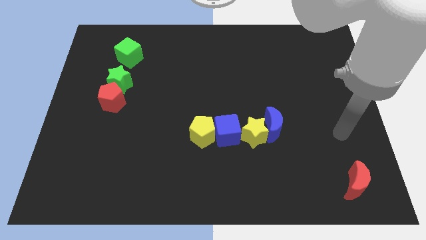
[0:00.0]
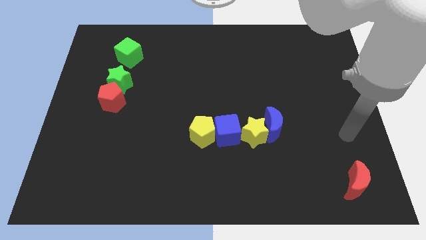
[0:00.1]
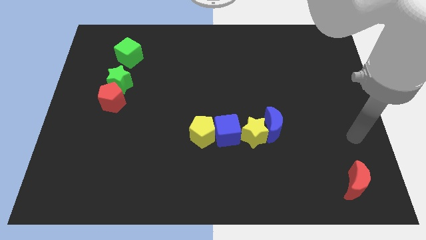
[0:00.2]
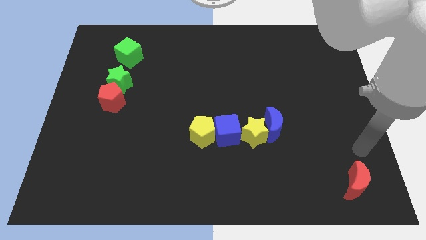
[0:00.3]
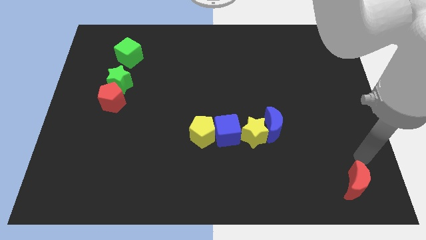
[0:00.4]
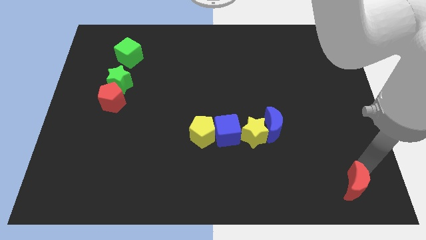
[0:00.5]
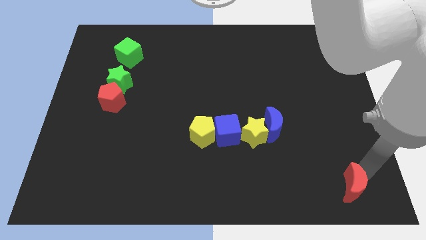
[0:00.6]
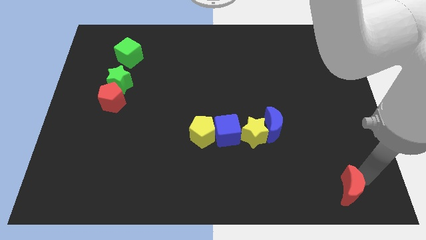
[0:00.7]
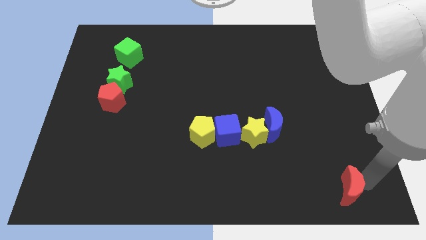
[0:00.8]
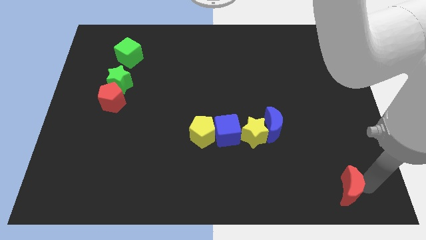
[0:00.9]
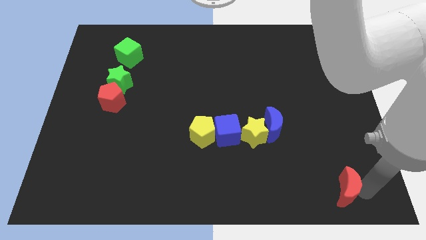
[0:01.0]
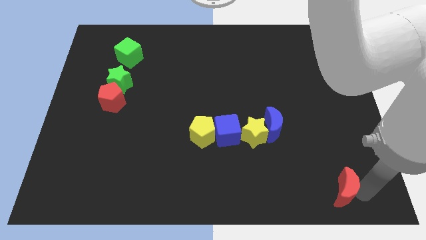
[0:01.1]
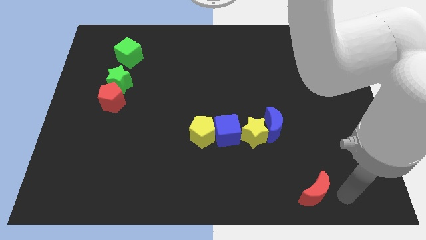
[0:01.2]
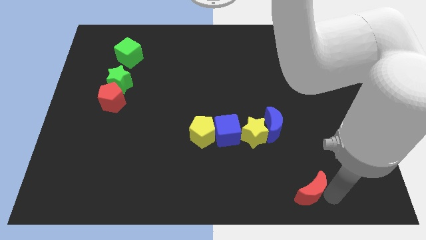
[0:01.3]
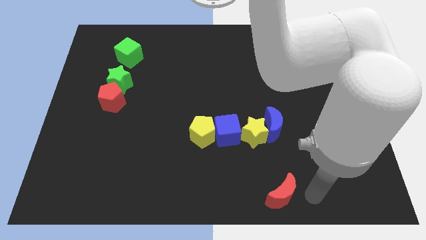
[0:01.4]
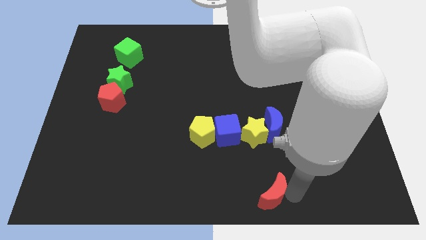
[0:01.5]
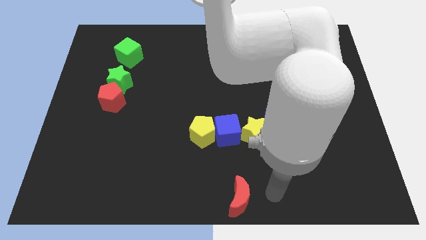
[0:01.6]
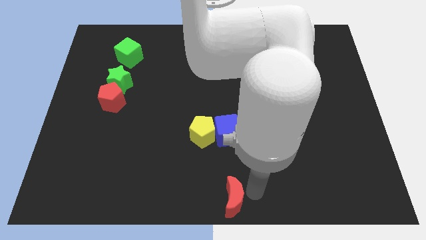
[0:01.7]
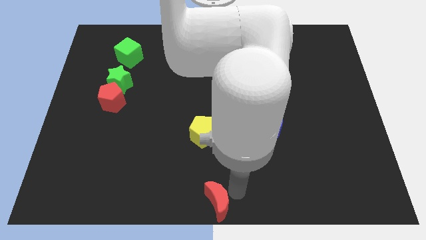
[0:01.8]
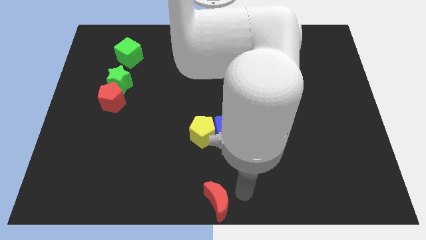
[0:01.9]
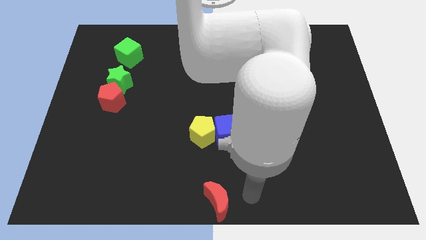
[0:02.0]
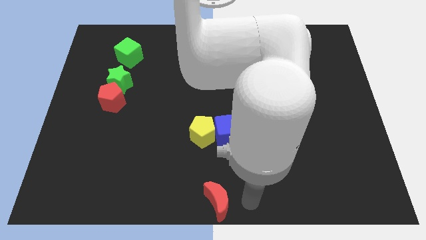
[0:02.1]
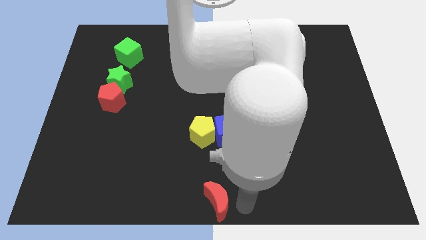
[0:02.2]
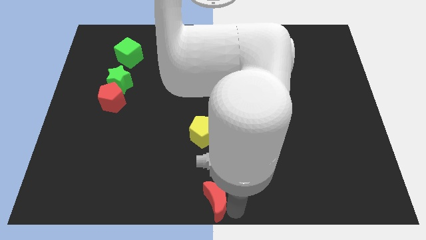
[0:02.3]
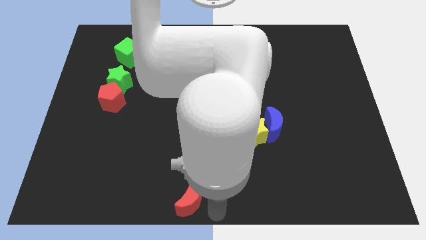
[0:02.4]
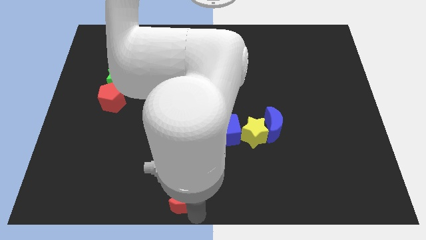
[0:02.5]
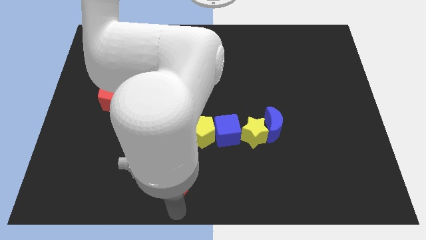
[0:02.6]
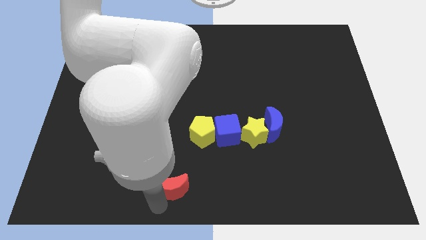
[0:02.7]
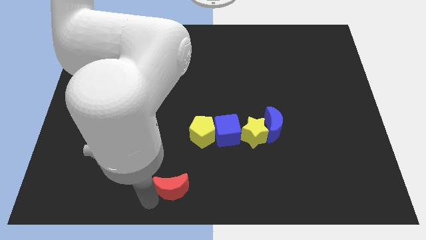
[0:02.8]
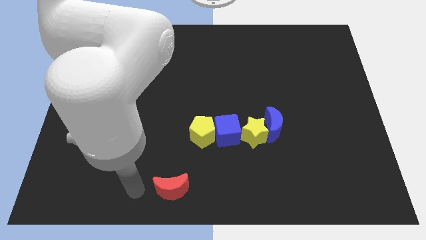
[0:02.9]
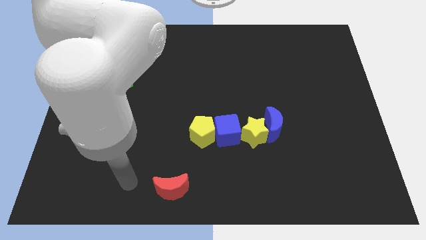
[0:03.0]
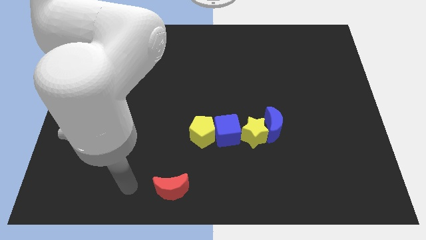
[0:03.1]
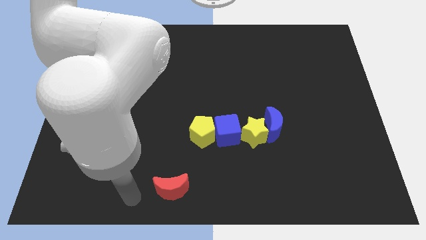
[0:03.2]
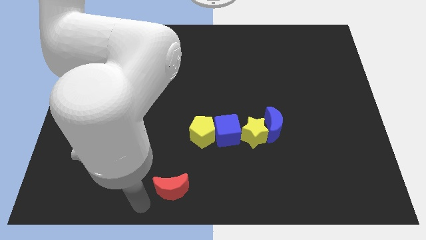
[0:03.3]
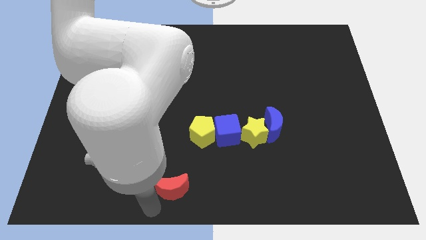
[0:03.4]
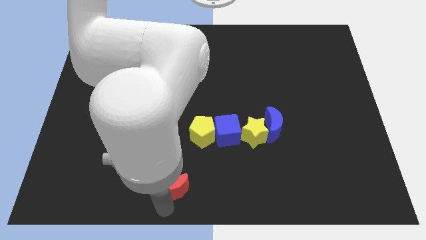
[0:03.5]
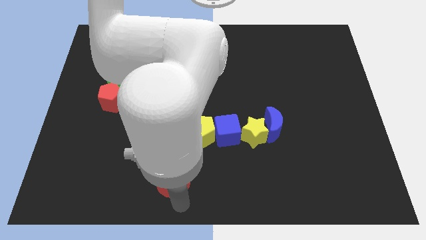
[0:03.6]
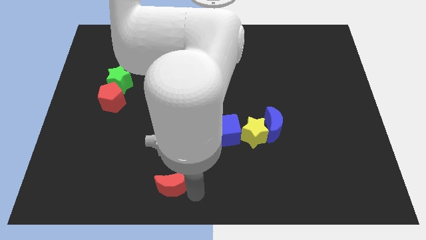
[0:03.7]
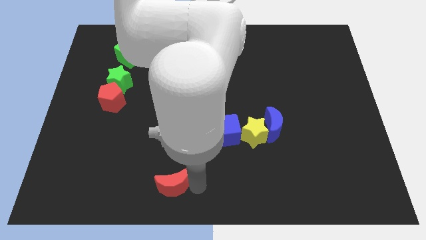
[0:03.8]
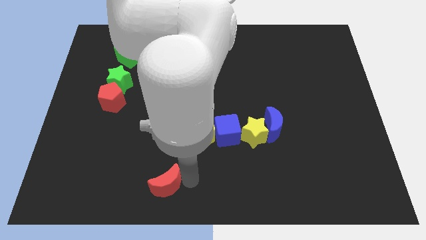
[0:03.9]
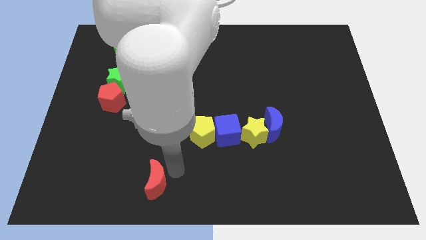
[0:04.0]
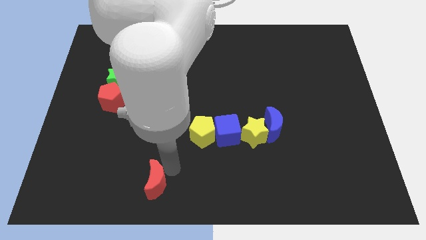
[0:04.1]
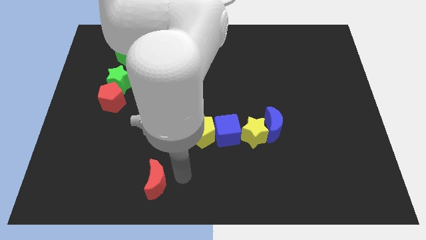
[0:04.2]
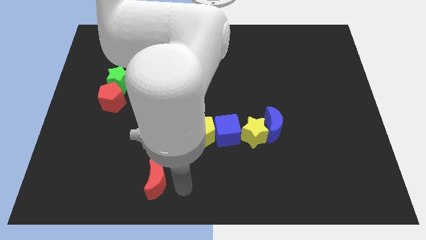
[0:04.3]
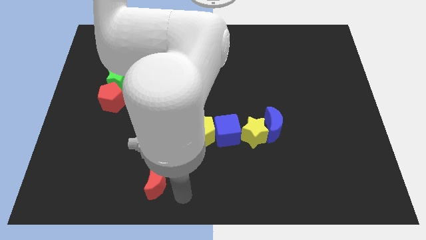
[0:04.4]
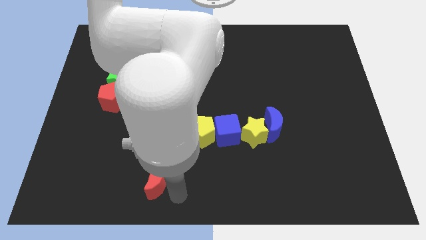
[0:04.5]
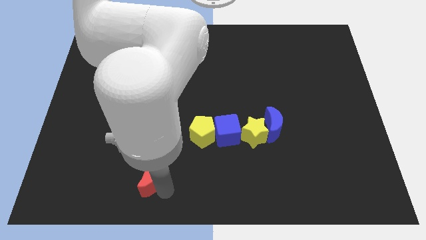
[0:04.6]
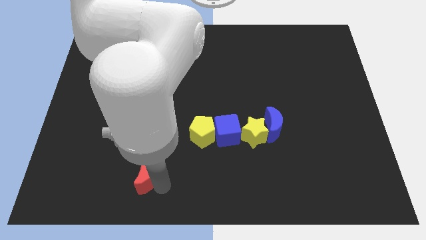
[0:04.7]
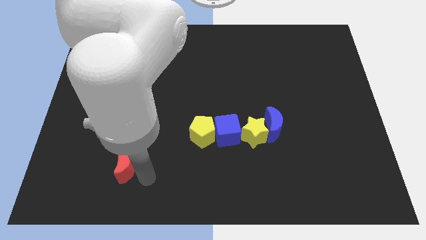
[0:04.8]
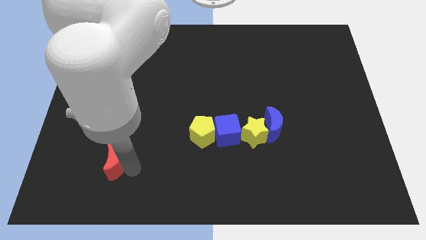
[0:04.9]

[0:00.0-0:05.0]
push the red crescent to the left of the board

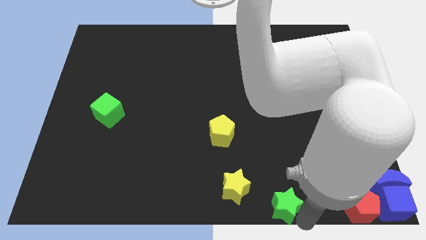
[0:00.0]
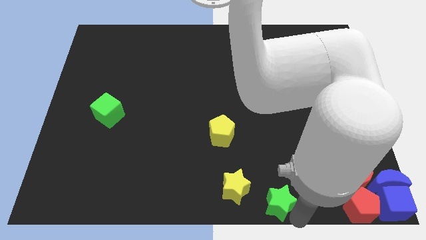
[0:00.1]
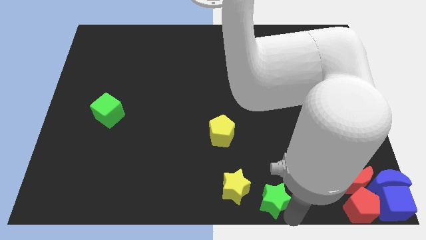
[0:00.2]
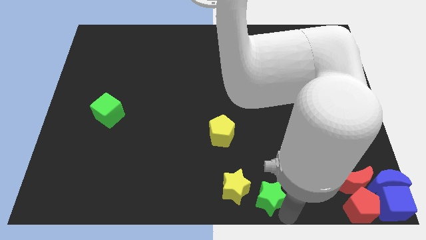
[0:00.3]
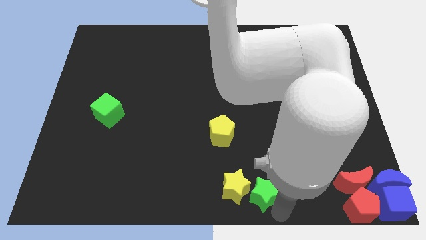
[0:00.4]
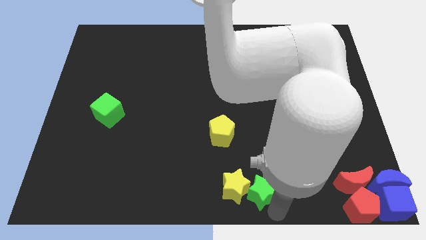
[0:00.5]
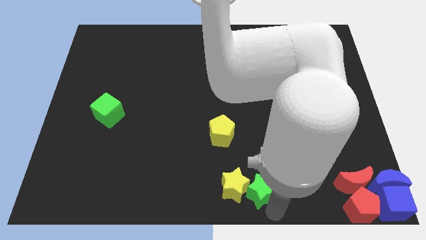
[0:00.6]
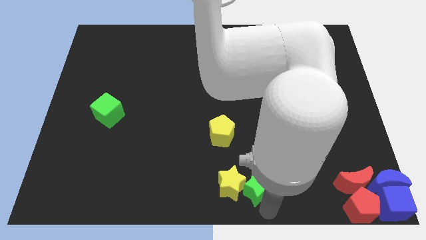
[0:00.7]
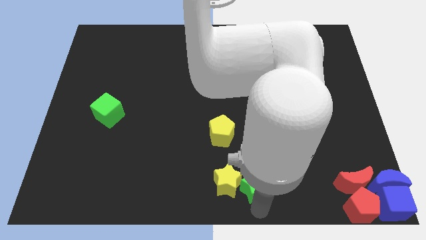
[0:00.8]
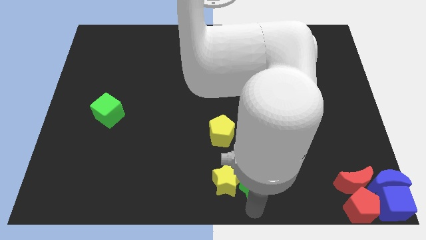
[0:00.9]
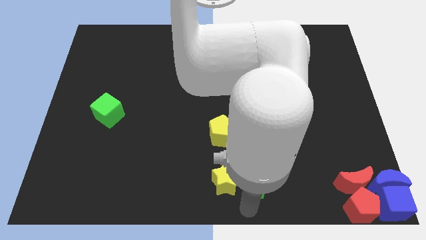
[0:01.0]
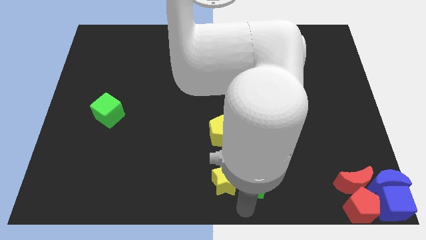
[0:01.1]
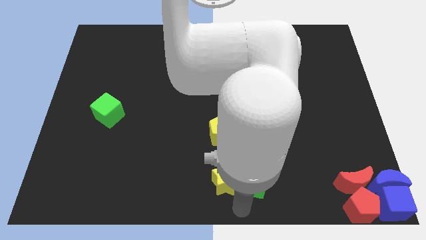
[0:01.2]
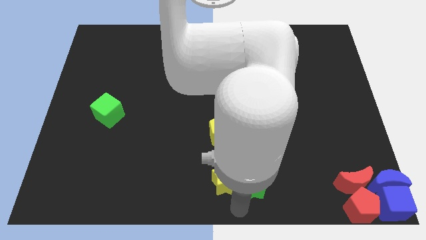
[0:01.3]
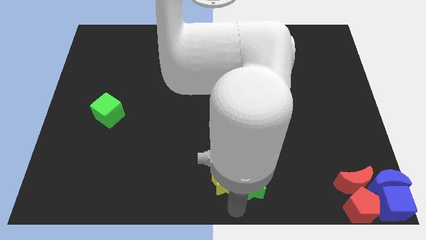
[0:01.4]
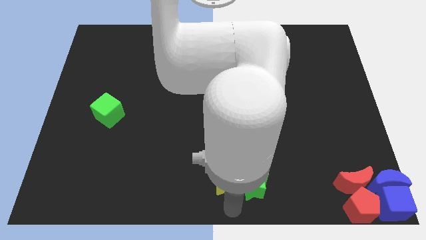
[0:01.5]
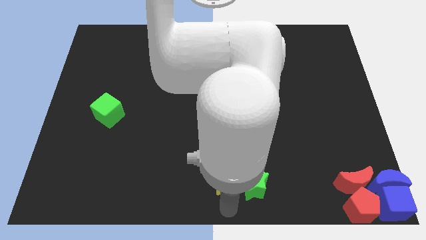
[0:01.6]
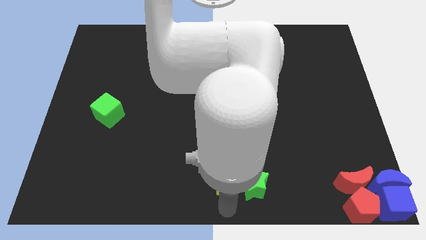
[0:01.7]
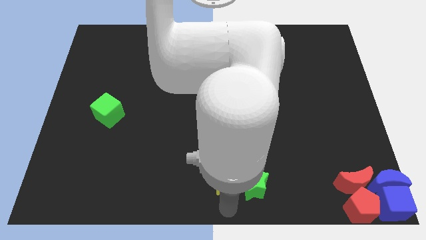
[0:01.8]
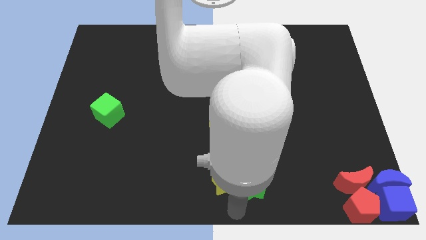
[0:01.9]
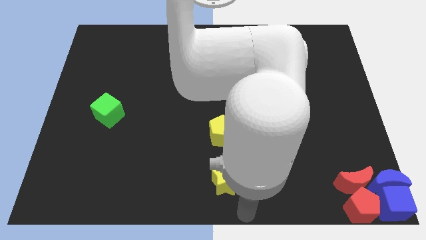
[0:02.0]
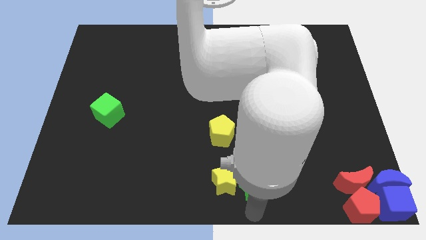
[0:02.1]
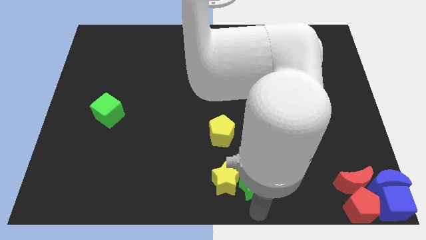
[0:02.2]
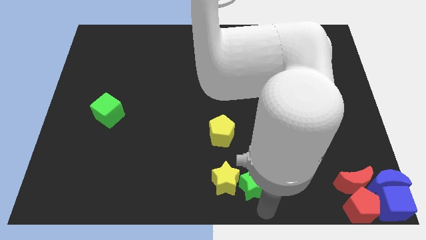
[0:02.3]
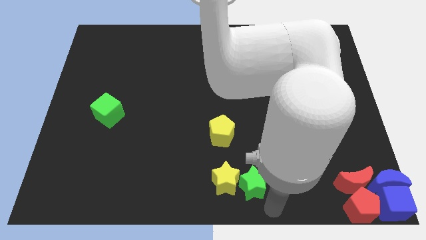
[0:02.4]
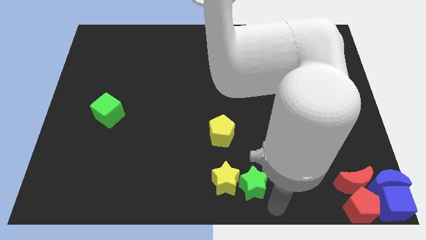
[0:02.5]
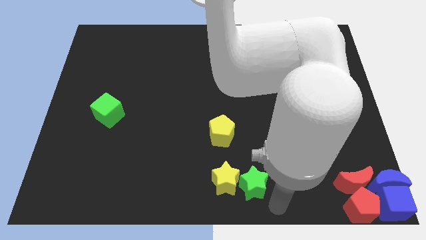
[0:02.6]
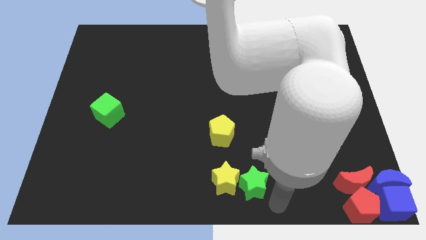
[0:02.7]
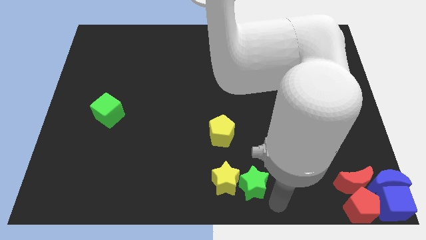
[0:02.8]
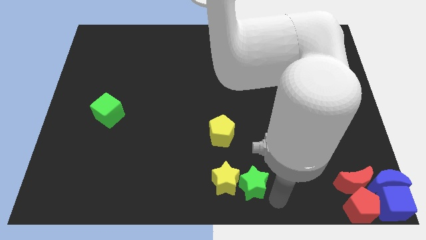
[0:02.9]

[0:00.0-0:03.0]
place green star and yellow star together

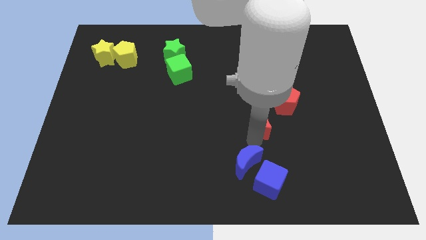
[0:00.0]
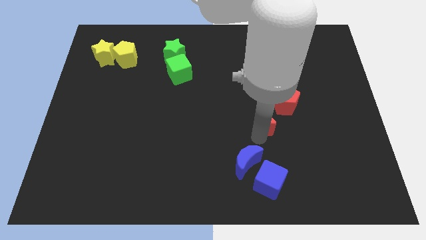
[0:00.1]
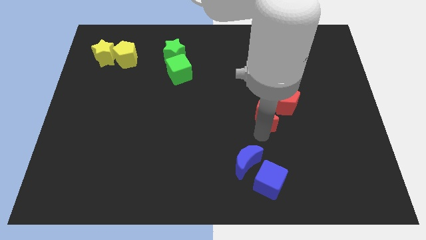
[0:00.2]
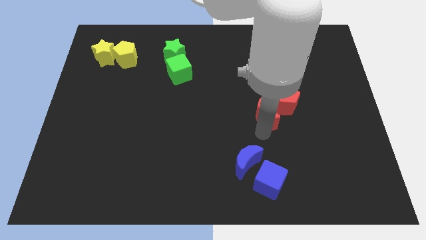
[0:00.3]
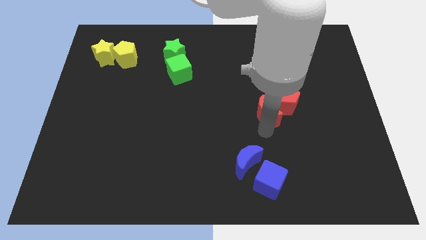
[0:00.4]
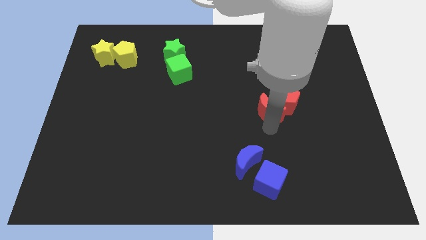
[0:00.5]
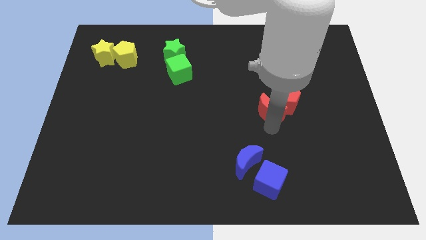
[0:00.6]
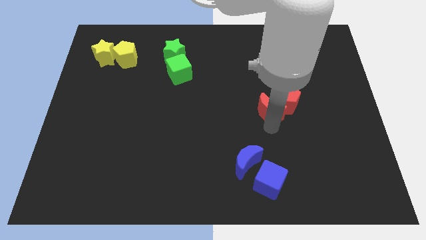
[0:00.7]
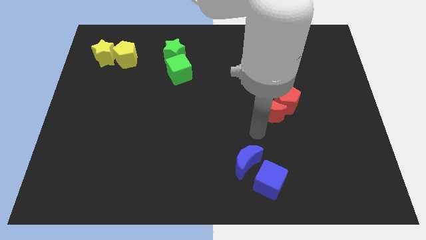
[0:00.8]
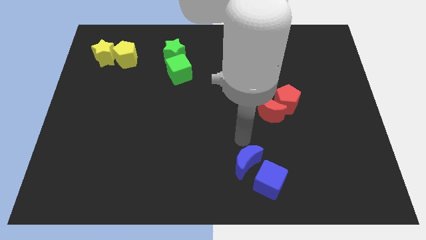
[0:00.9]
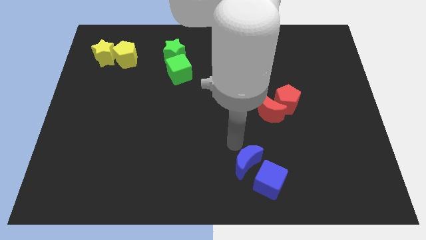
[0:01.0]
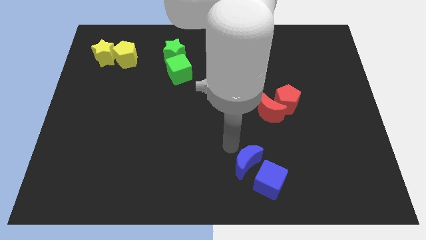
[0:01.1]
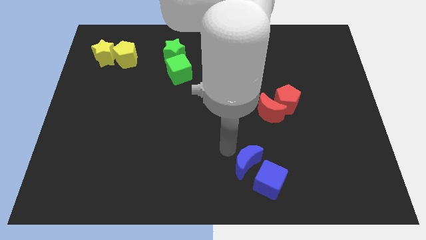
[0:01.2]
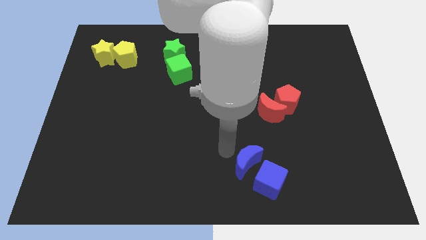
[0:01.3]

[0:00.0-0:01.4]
move the red moon towards the bottom left side of red pentagon
